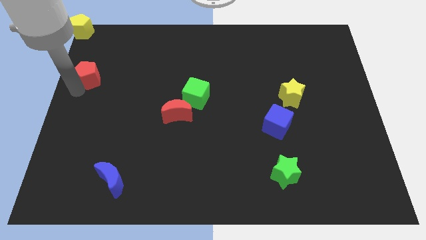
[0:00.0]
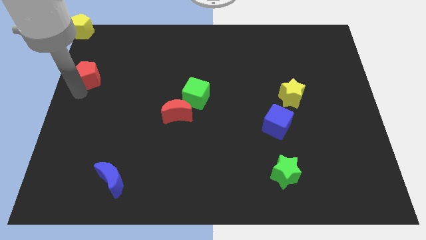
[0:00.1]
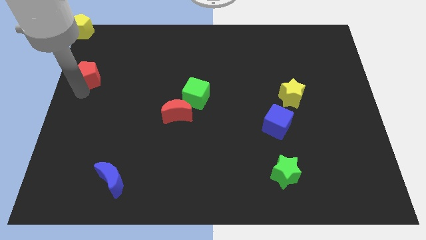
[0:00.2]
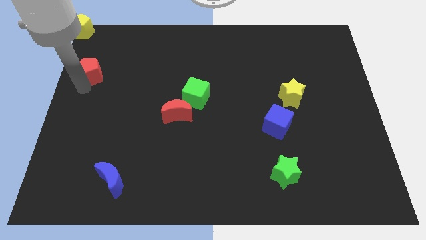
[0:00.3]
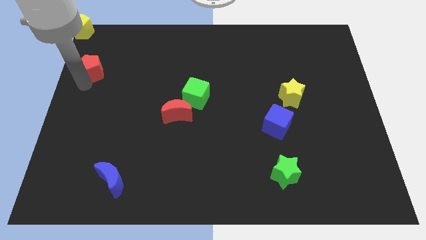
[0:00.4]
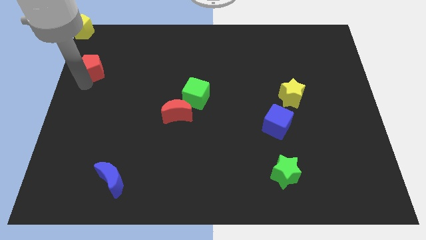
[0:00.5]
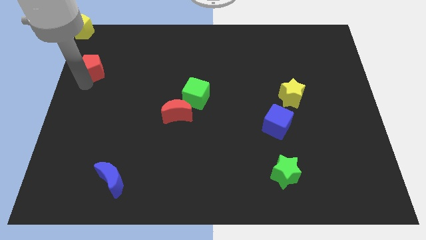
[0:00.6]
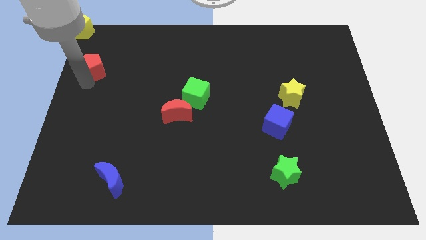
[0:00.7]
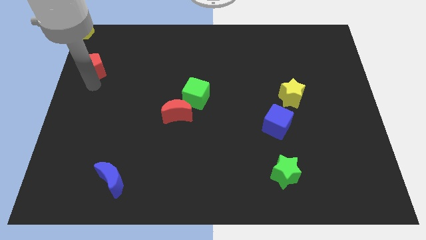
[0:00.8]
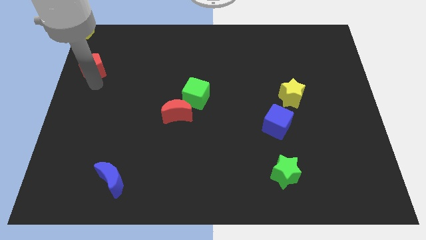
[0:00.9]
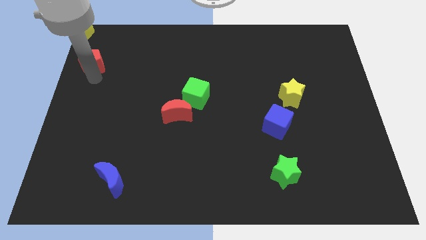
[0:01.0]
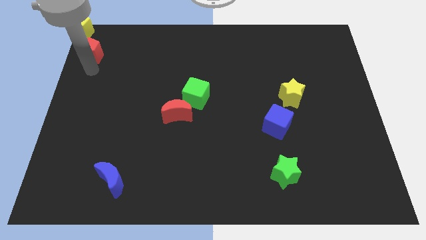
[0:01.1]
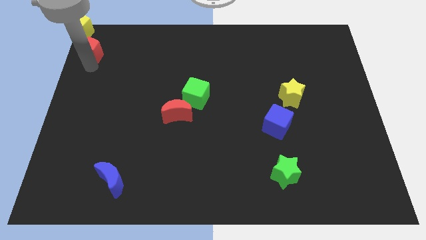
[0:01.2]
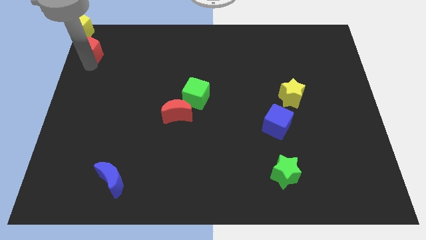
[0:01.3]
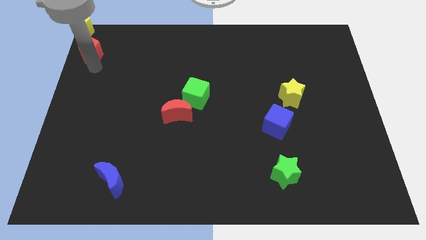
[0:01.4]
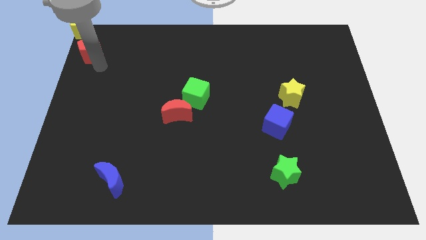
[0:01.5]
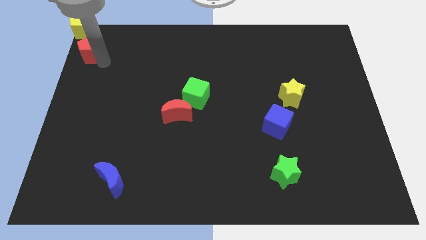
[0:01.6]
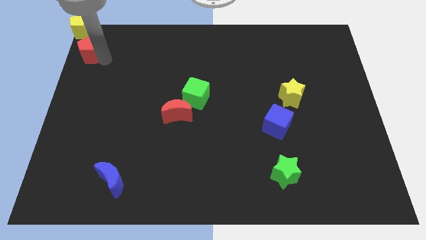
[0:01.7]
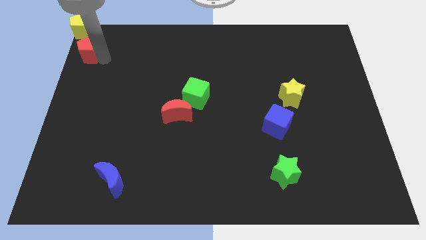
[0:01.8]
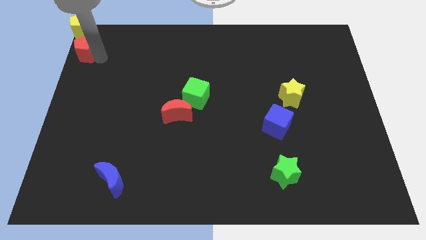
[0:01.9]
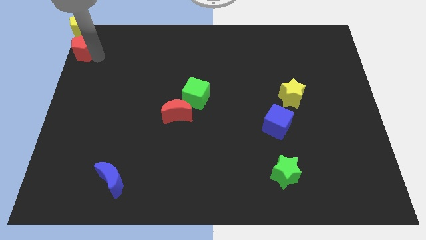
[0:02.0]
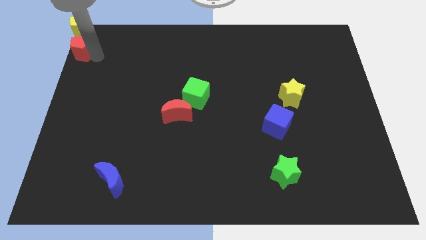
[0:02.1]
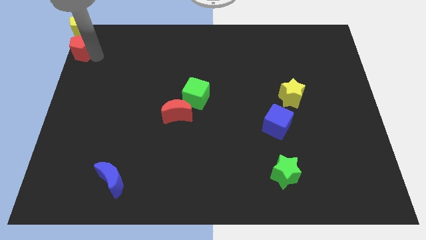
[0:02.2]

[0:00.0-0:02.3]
move the red pentagon to the bottom of the yellow pentagon

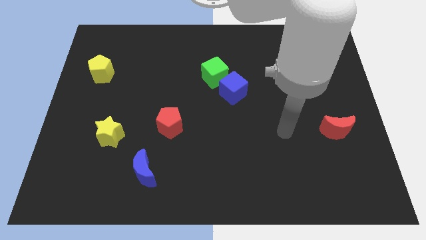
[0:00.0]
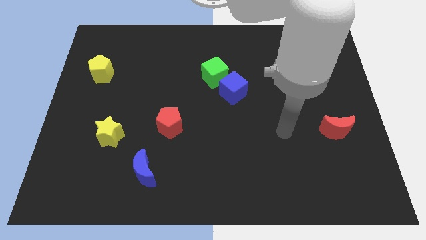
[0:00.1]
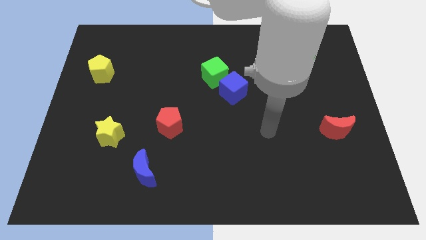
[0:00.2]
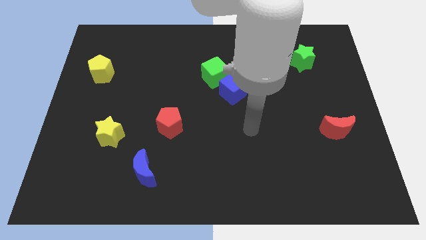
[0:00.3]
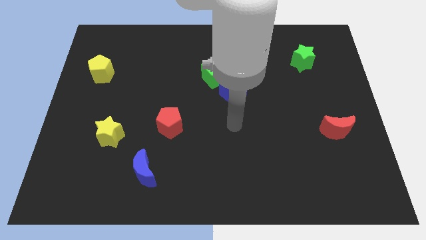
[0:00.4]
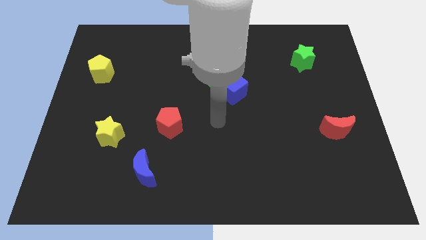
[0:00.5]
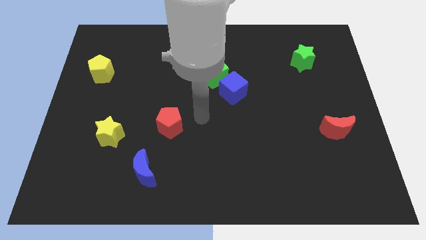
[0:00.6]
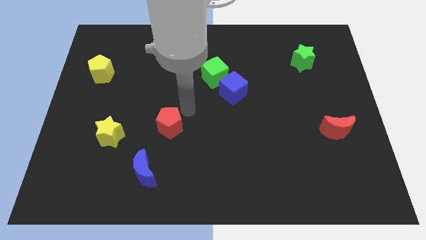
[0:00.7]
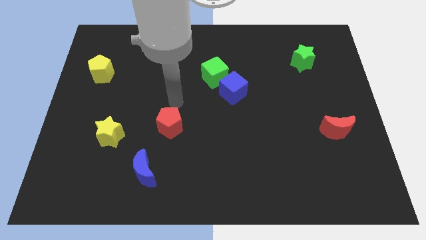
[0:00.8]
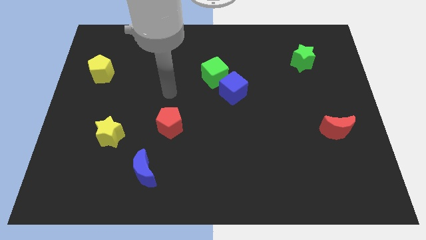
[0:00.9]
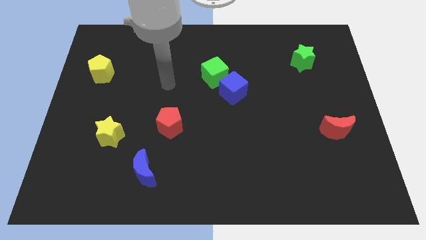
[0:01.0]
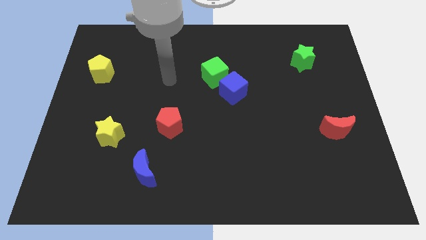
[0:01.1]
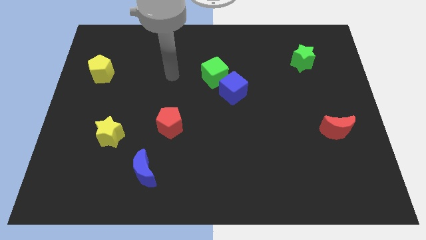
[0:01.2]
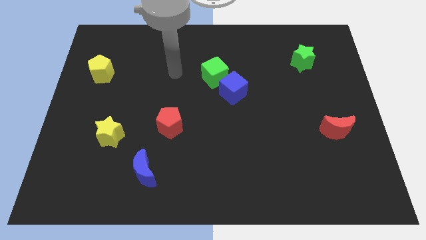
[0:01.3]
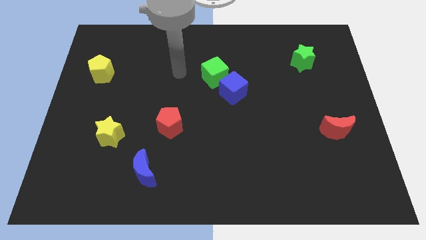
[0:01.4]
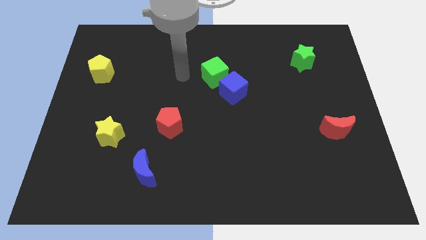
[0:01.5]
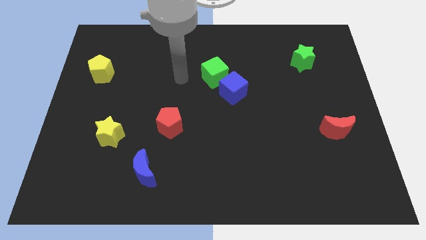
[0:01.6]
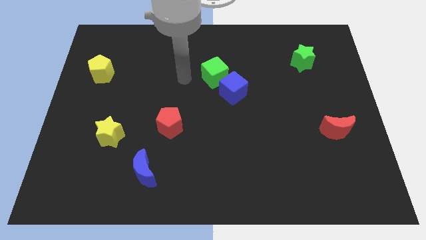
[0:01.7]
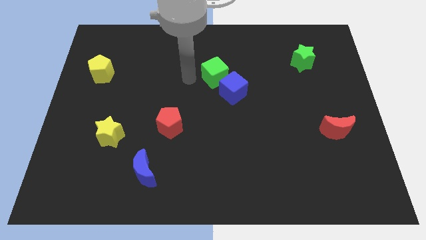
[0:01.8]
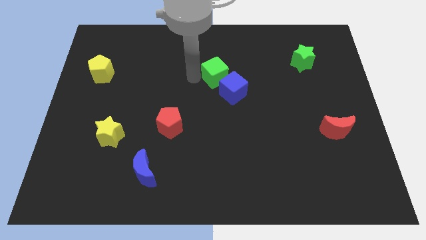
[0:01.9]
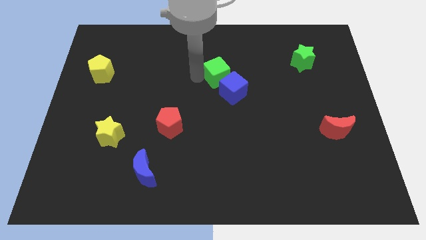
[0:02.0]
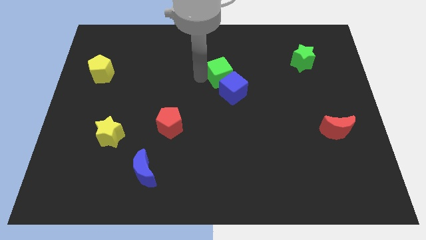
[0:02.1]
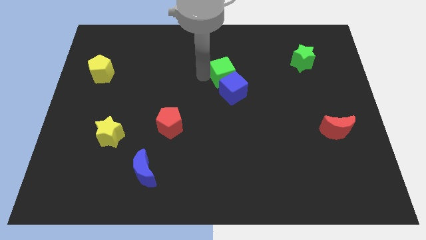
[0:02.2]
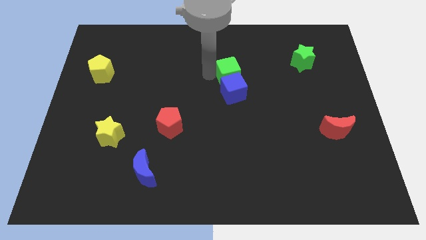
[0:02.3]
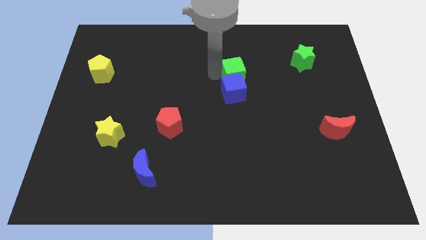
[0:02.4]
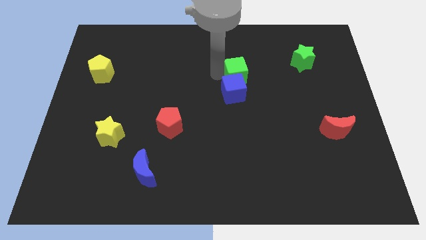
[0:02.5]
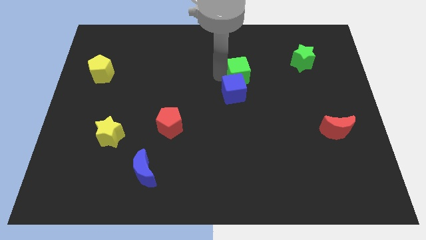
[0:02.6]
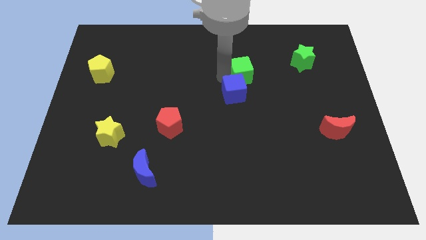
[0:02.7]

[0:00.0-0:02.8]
move the green cube to the top right of blue cube

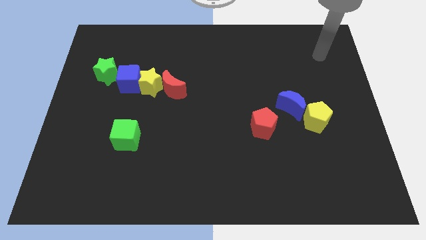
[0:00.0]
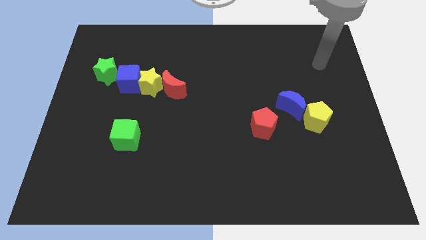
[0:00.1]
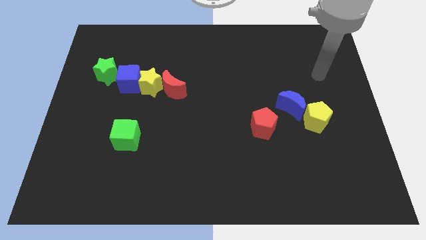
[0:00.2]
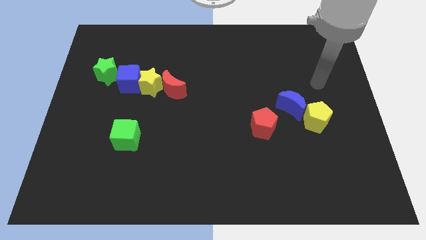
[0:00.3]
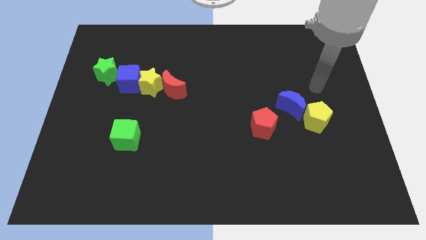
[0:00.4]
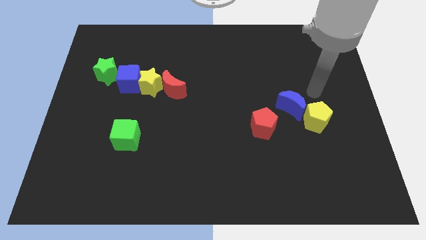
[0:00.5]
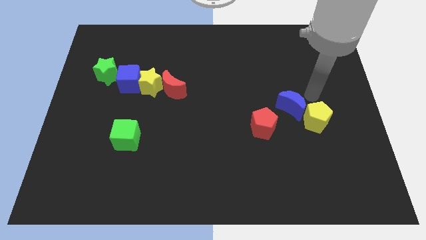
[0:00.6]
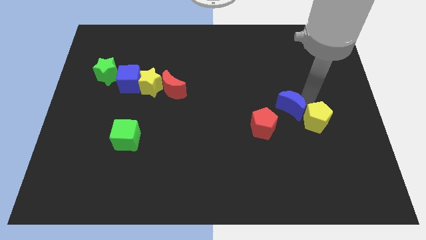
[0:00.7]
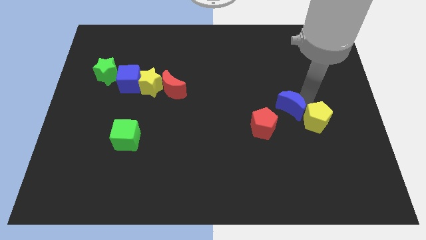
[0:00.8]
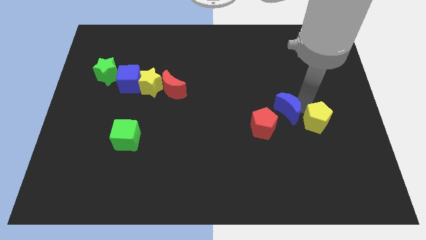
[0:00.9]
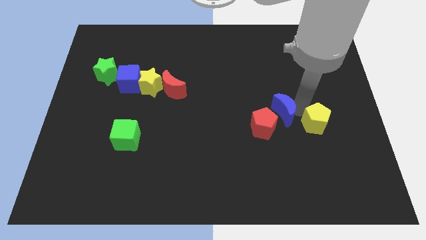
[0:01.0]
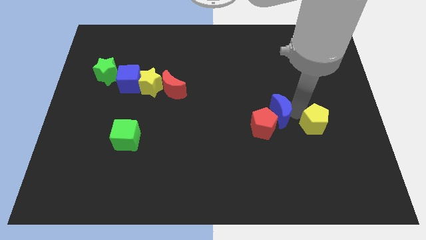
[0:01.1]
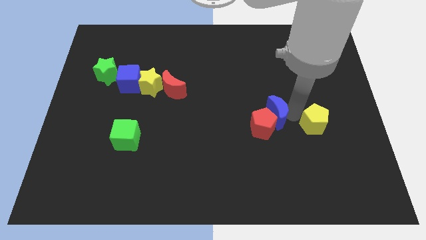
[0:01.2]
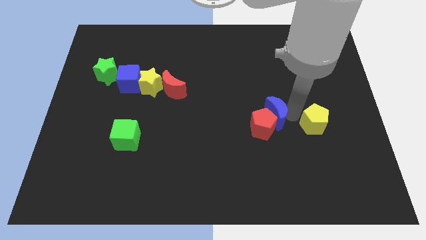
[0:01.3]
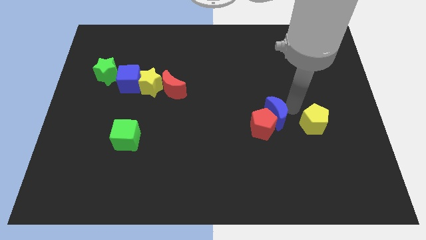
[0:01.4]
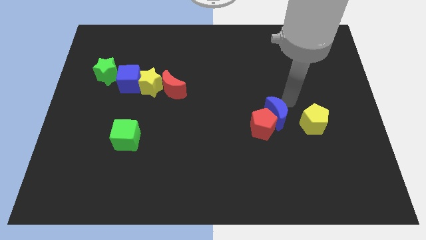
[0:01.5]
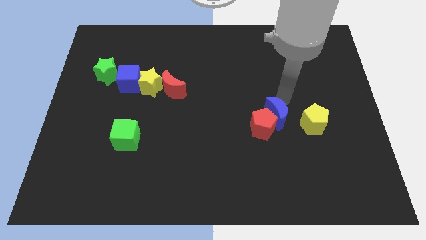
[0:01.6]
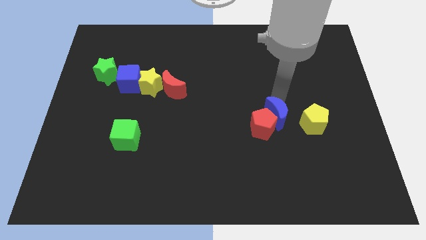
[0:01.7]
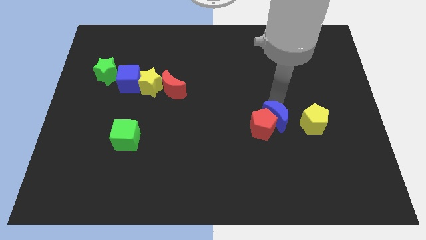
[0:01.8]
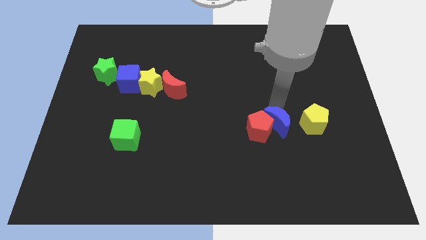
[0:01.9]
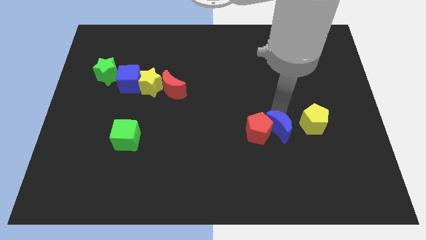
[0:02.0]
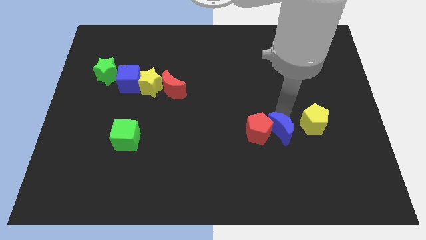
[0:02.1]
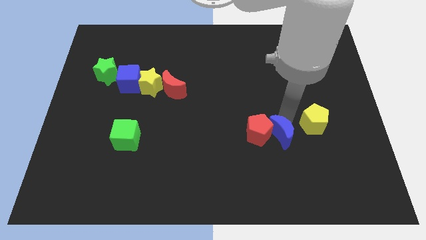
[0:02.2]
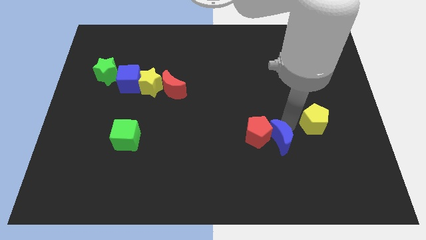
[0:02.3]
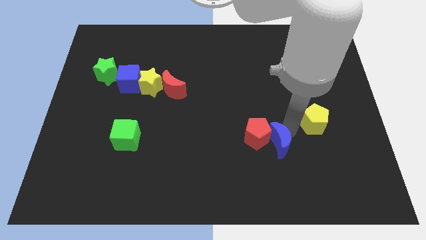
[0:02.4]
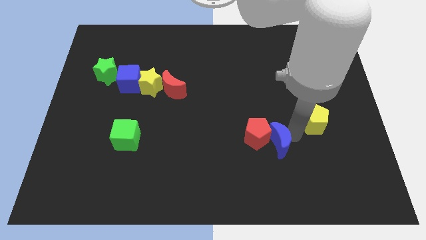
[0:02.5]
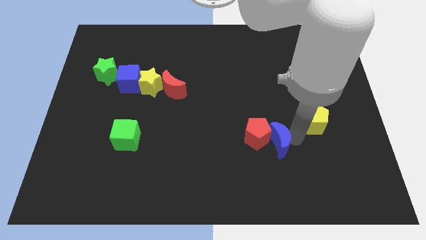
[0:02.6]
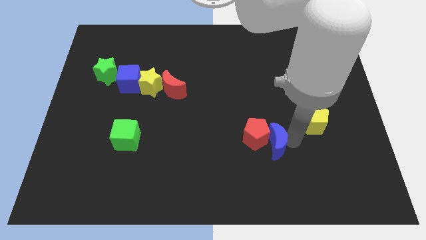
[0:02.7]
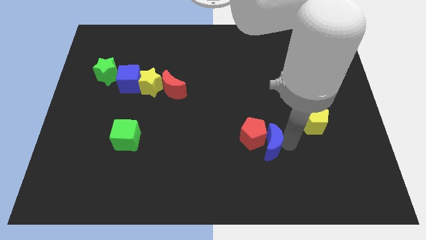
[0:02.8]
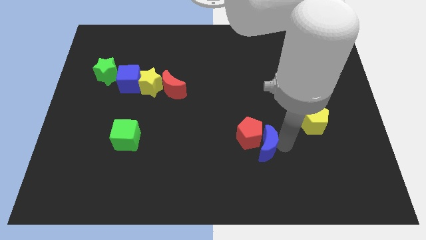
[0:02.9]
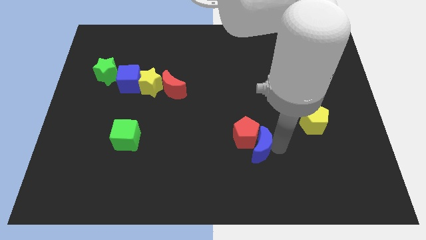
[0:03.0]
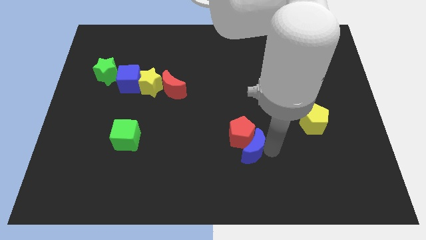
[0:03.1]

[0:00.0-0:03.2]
push the yellow pentagon blue moon and red pentagon towards the bottom side

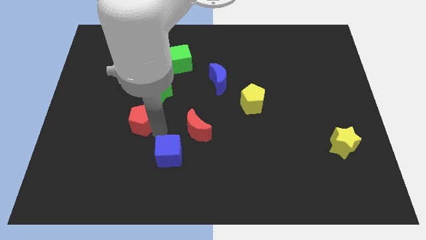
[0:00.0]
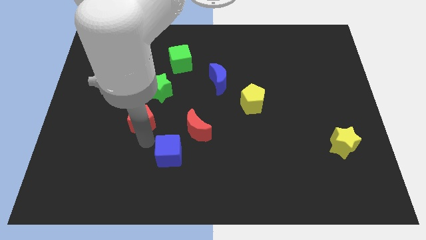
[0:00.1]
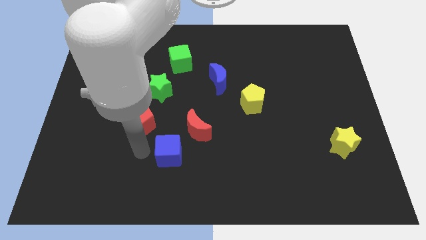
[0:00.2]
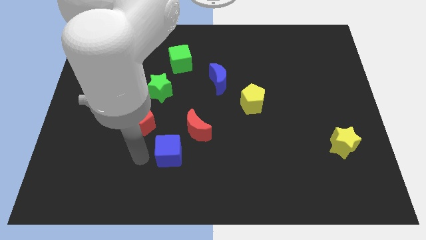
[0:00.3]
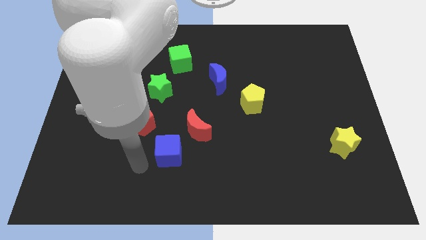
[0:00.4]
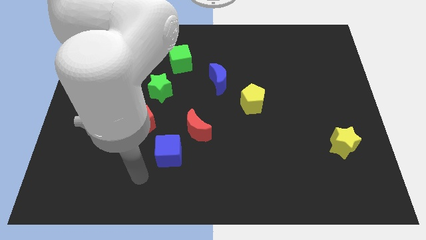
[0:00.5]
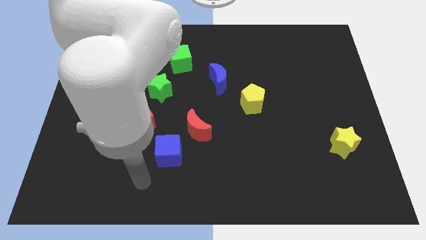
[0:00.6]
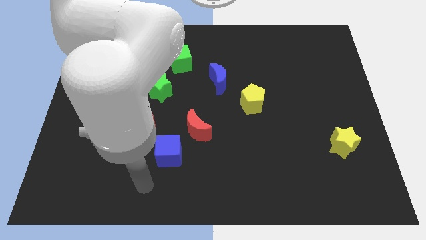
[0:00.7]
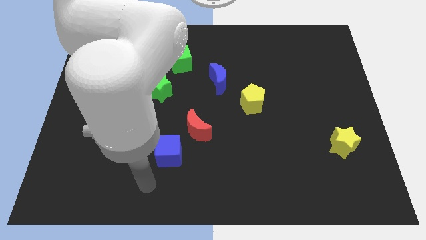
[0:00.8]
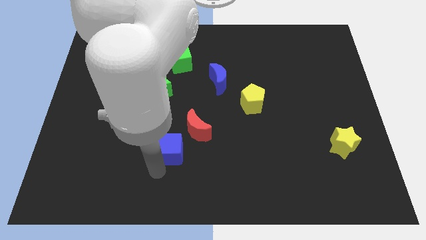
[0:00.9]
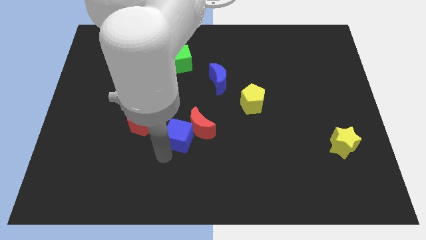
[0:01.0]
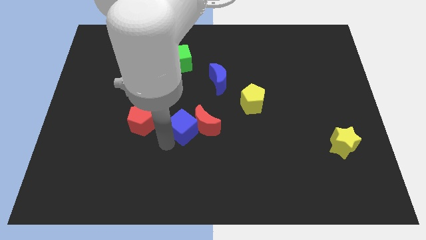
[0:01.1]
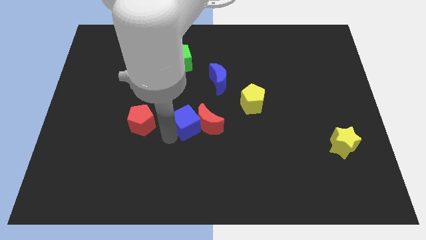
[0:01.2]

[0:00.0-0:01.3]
move the blue cube into the red crescent
